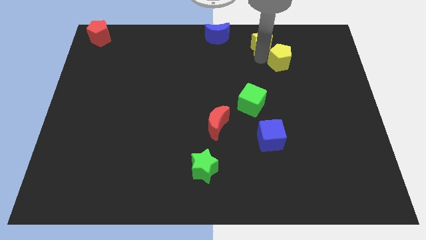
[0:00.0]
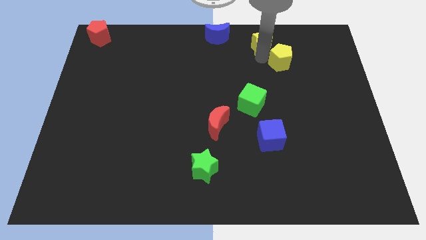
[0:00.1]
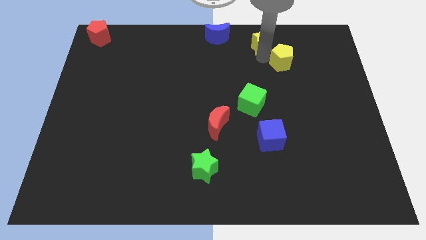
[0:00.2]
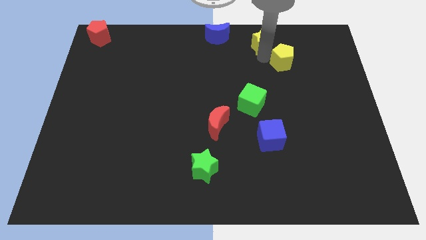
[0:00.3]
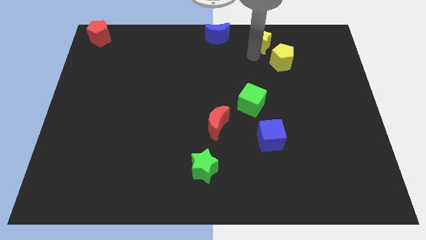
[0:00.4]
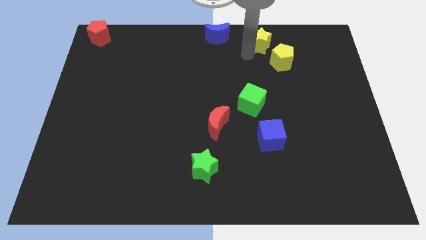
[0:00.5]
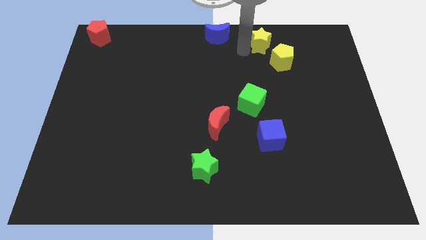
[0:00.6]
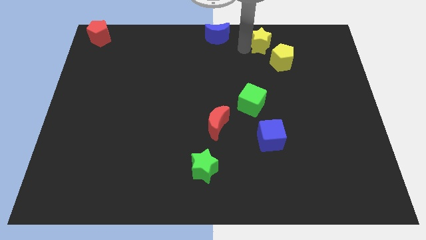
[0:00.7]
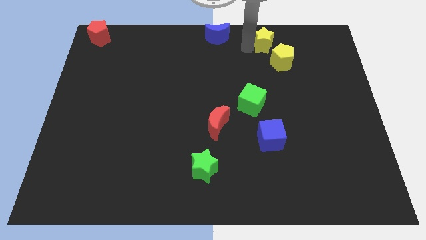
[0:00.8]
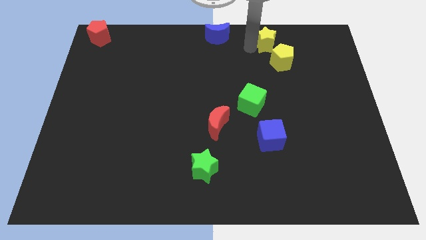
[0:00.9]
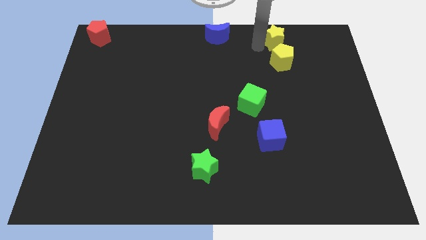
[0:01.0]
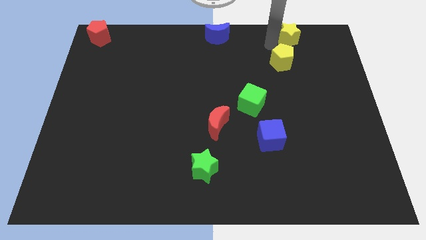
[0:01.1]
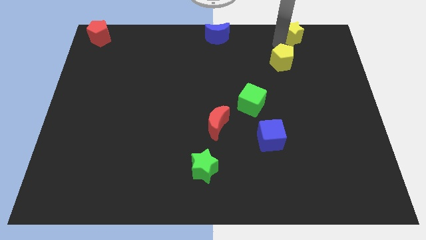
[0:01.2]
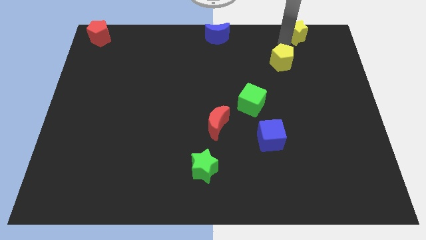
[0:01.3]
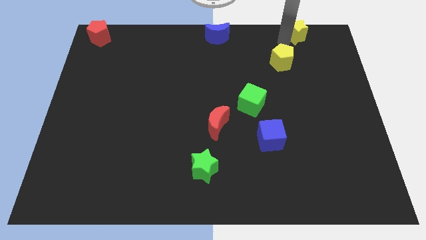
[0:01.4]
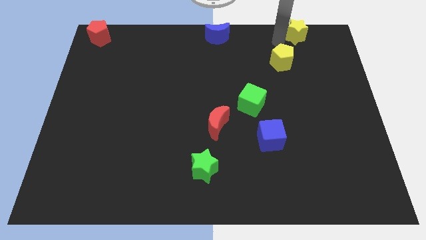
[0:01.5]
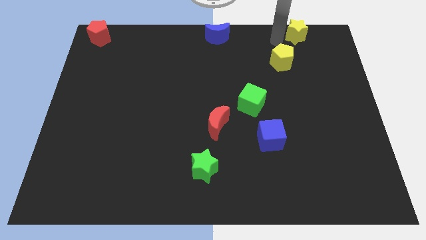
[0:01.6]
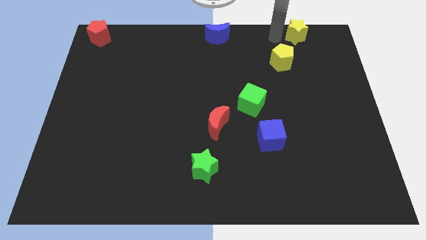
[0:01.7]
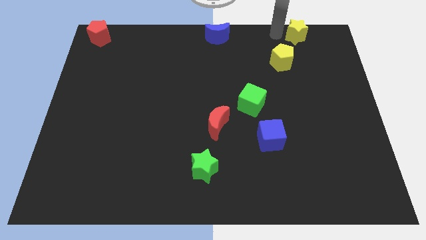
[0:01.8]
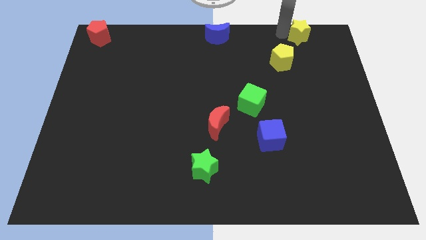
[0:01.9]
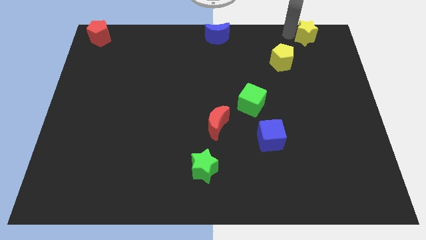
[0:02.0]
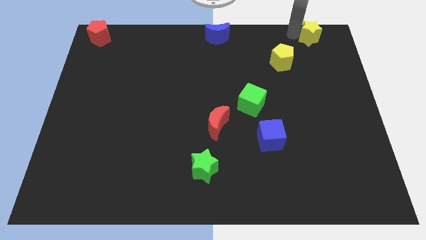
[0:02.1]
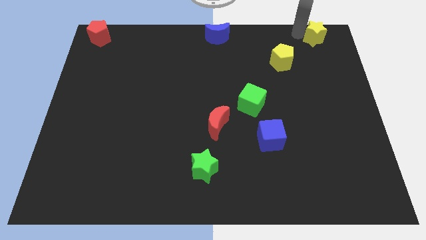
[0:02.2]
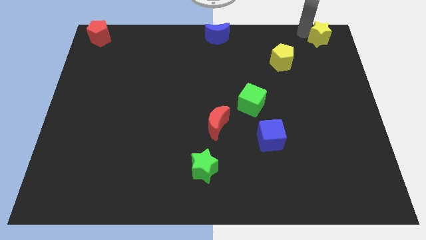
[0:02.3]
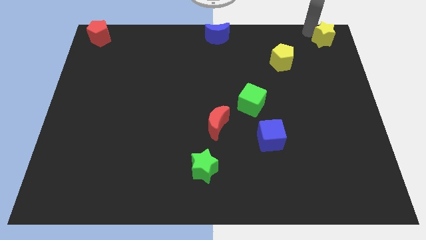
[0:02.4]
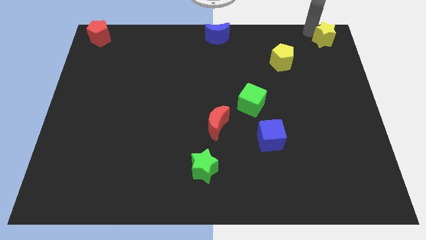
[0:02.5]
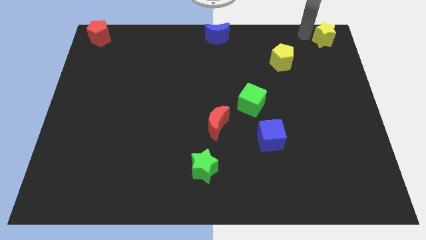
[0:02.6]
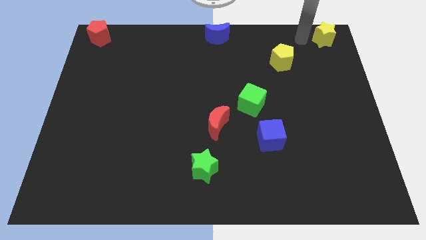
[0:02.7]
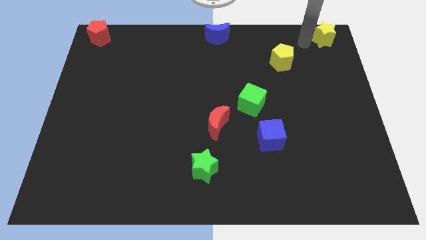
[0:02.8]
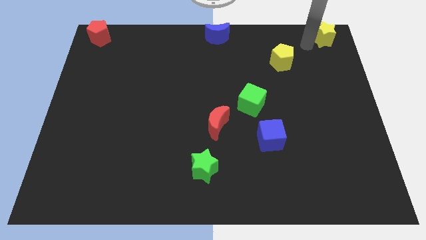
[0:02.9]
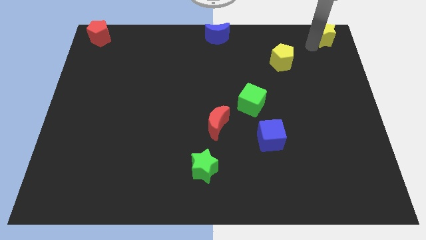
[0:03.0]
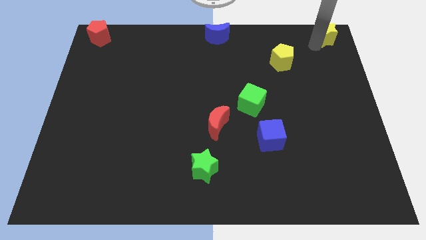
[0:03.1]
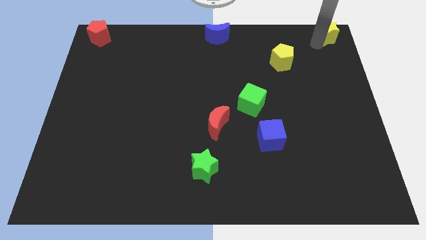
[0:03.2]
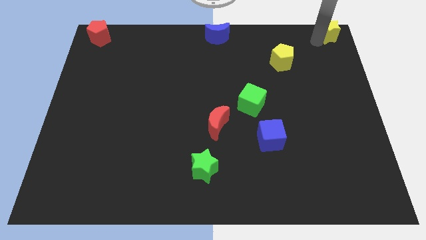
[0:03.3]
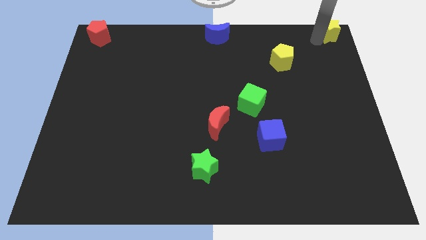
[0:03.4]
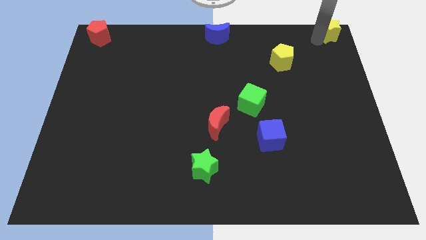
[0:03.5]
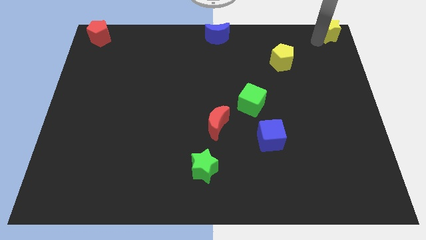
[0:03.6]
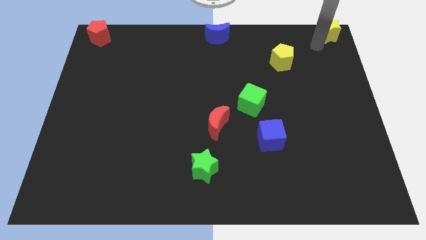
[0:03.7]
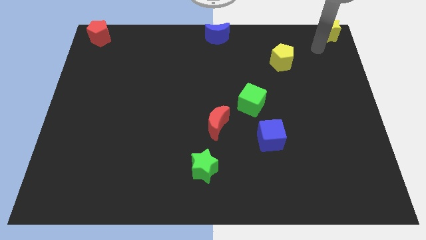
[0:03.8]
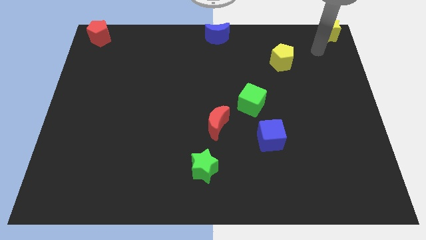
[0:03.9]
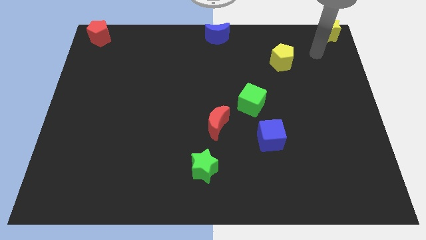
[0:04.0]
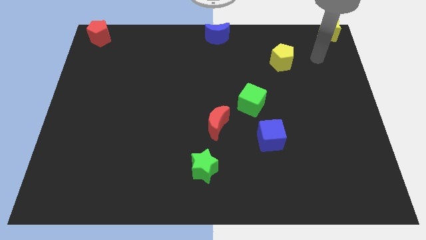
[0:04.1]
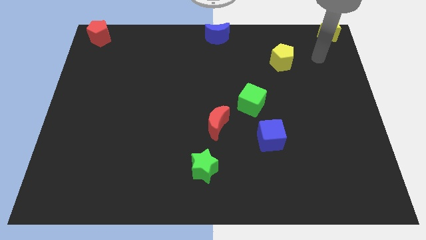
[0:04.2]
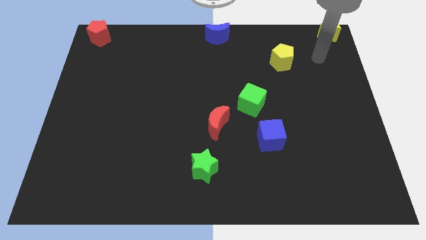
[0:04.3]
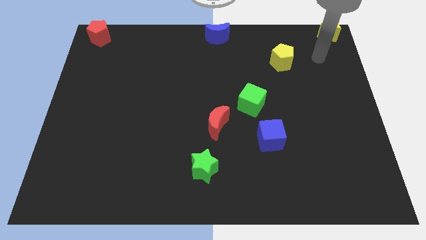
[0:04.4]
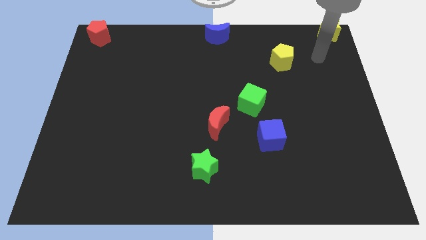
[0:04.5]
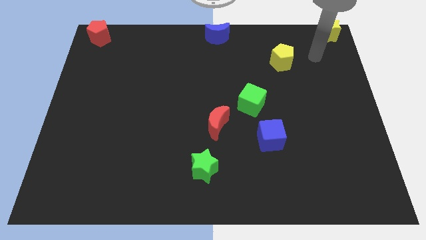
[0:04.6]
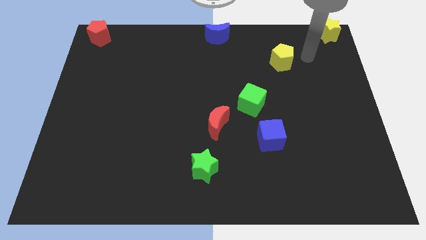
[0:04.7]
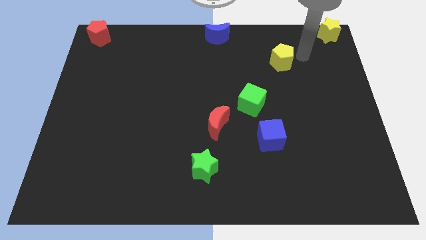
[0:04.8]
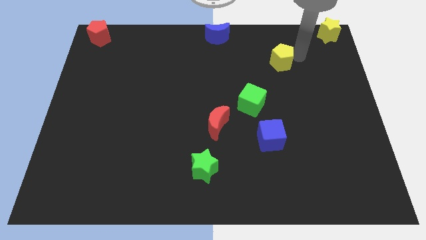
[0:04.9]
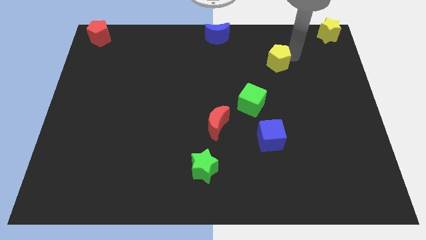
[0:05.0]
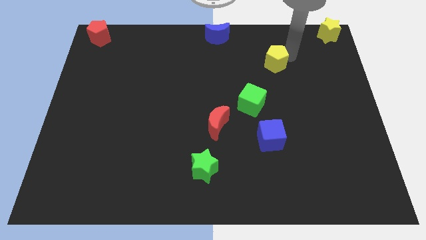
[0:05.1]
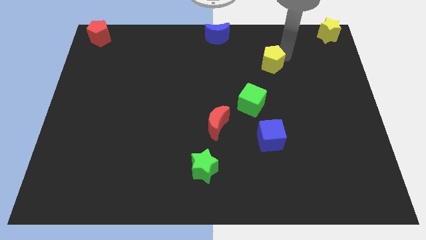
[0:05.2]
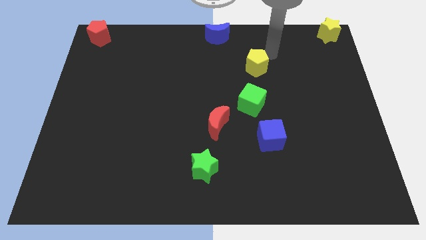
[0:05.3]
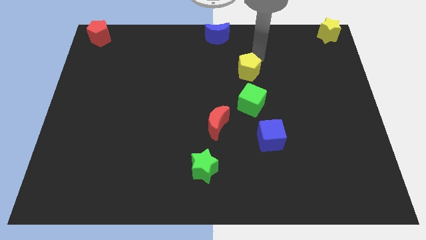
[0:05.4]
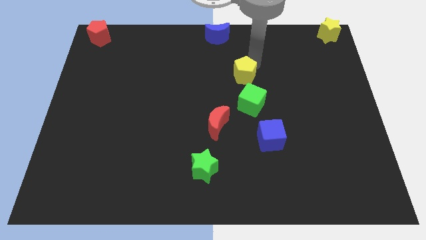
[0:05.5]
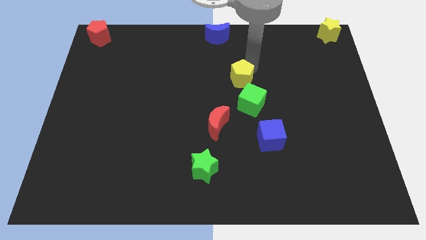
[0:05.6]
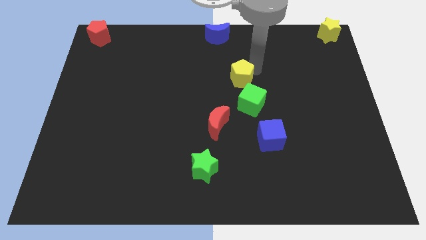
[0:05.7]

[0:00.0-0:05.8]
push the yellow star towards the right top corner of the board

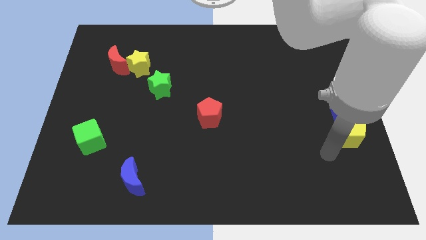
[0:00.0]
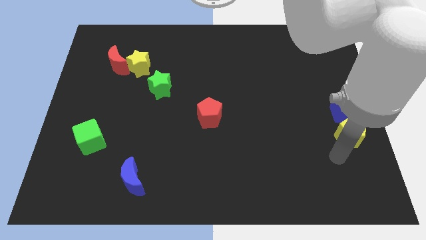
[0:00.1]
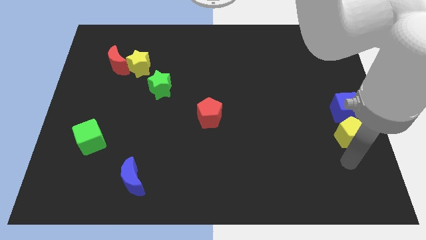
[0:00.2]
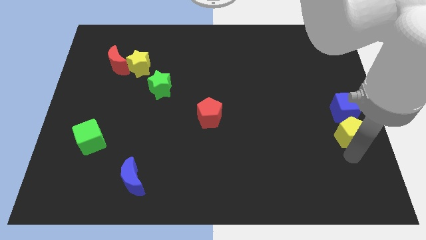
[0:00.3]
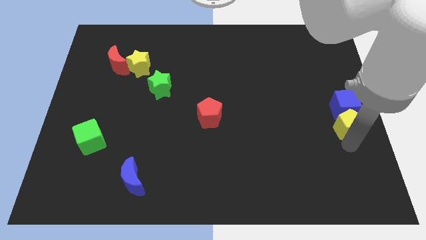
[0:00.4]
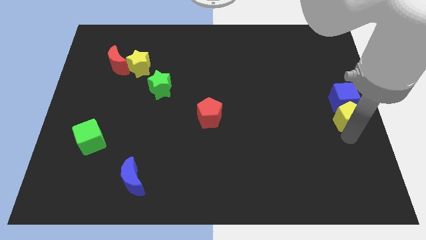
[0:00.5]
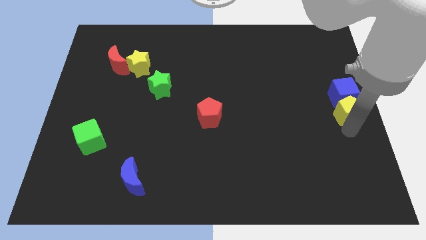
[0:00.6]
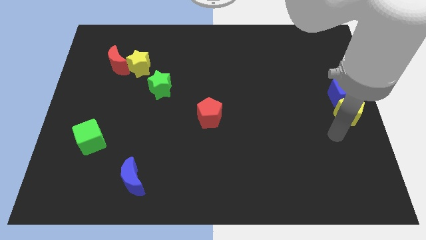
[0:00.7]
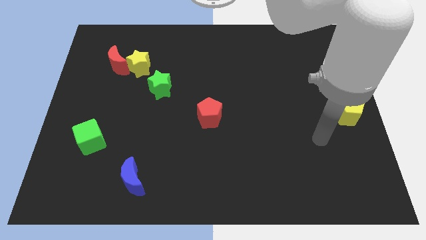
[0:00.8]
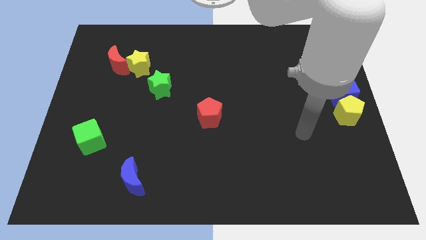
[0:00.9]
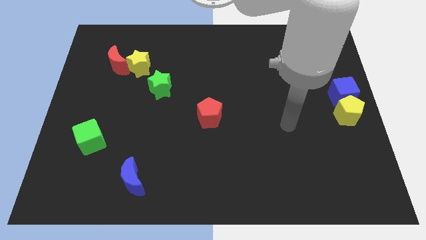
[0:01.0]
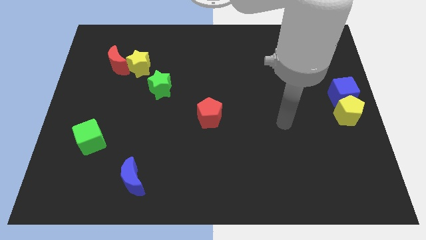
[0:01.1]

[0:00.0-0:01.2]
place the blue cube and the yellow pentagon to the right center of the board

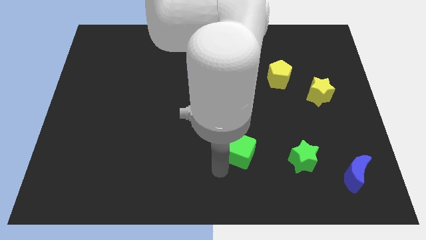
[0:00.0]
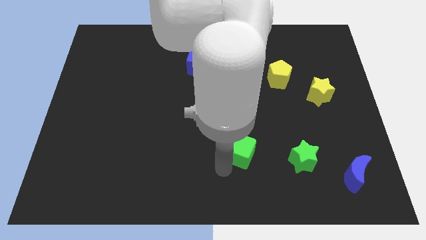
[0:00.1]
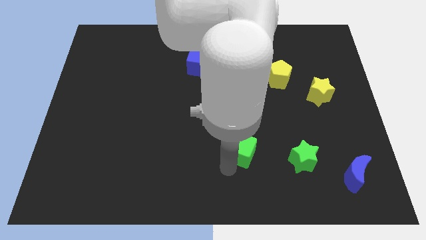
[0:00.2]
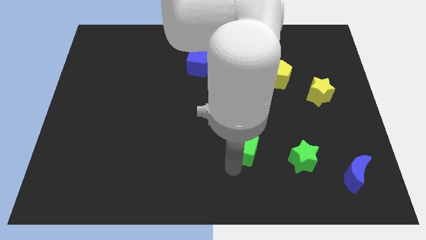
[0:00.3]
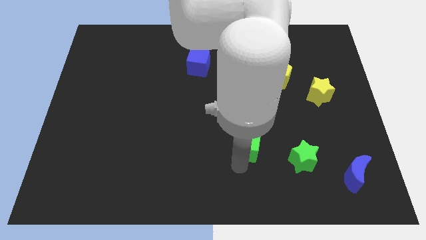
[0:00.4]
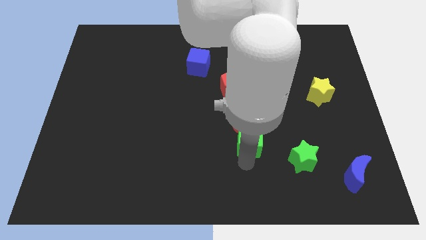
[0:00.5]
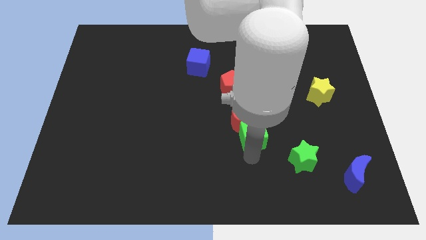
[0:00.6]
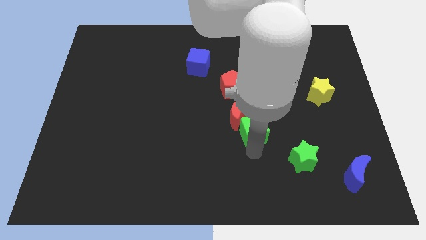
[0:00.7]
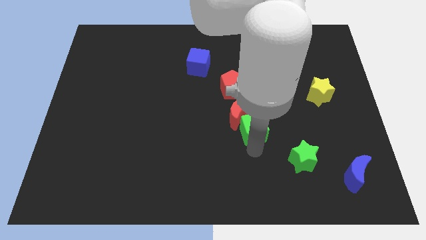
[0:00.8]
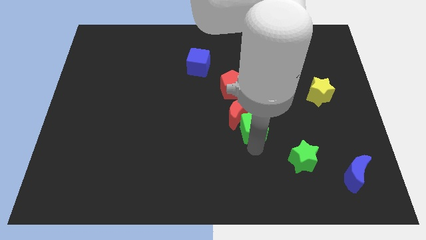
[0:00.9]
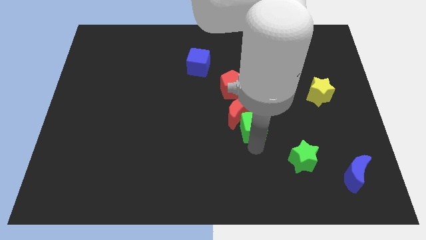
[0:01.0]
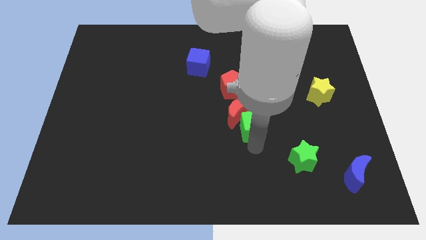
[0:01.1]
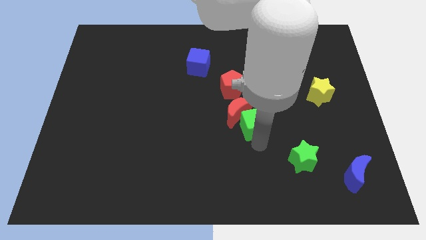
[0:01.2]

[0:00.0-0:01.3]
push the green cube into the red crescent

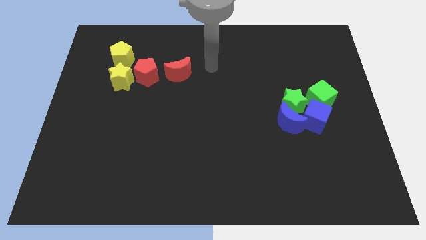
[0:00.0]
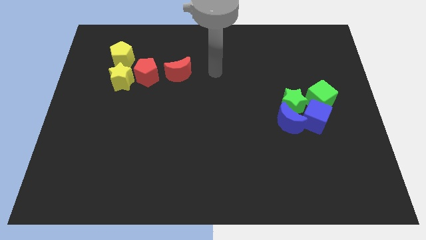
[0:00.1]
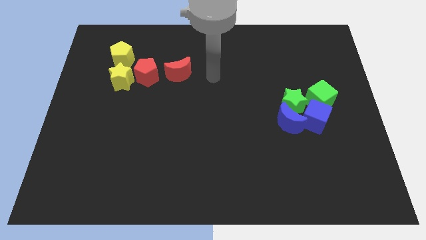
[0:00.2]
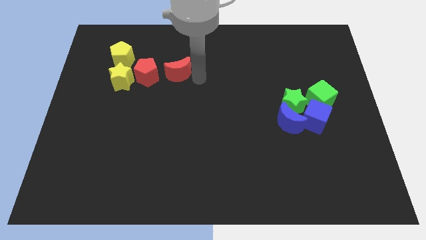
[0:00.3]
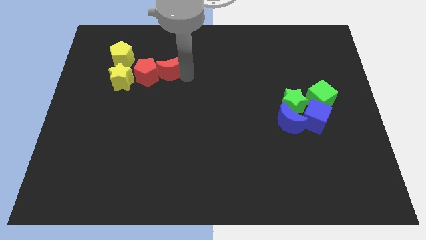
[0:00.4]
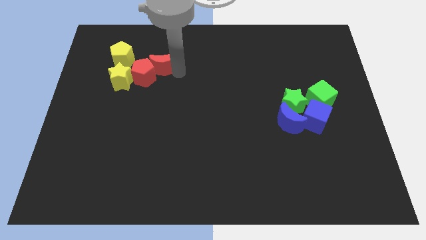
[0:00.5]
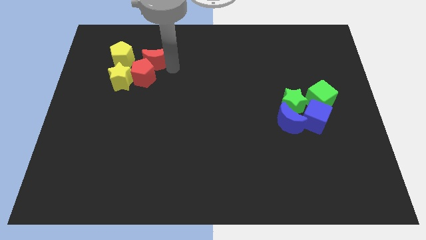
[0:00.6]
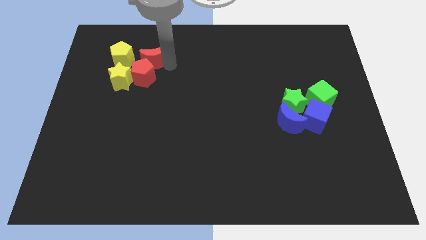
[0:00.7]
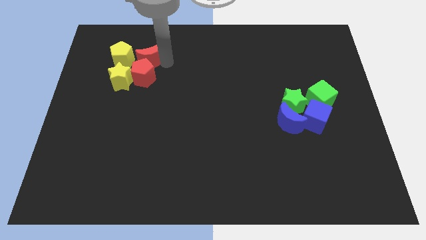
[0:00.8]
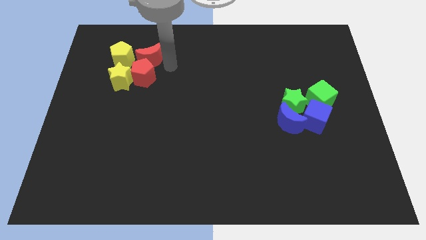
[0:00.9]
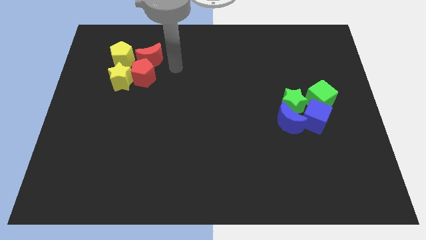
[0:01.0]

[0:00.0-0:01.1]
place the red crescent into the red pentagon
